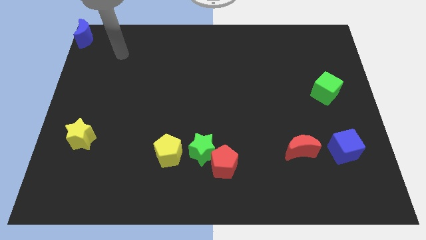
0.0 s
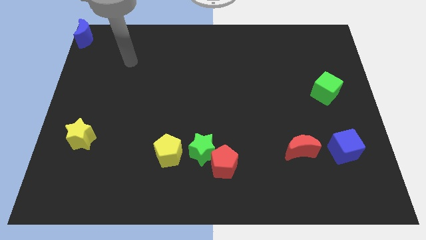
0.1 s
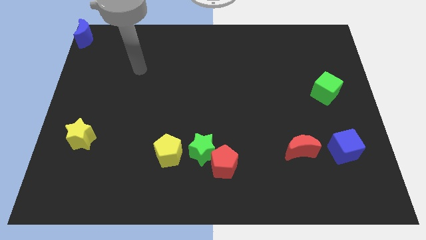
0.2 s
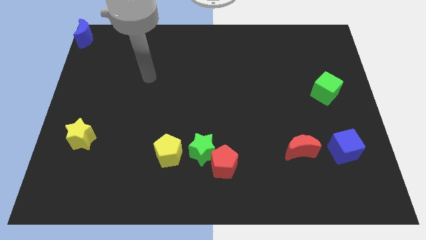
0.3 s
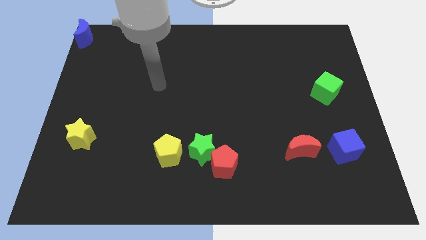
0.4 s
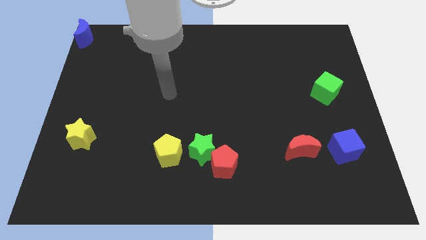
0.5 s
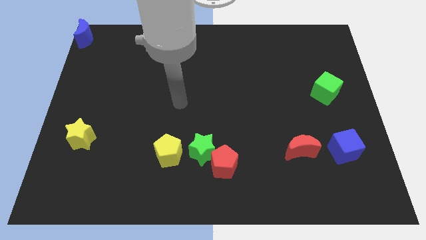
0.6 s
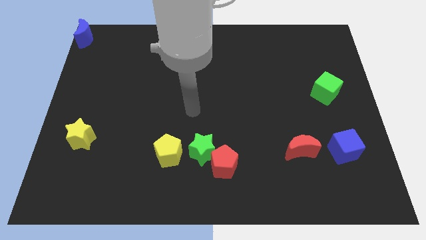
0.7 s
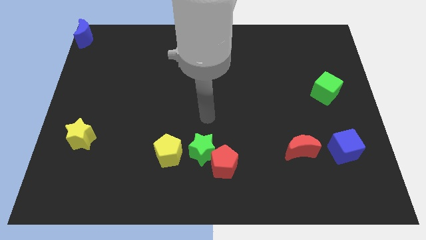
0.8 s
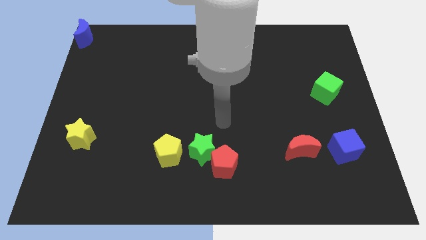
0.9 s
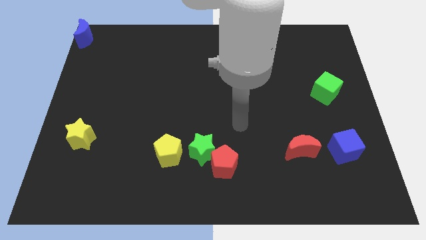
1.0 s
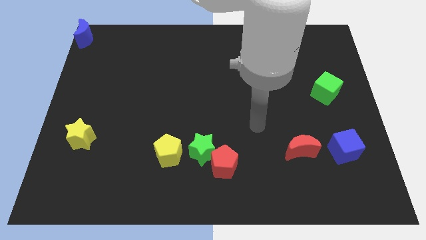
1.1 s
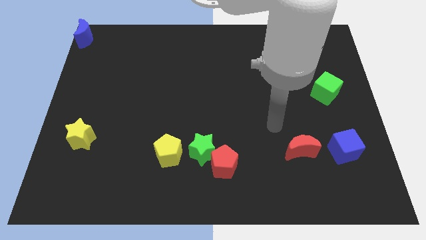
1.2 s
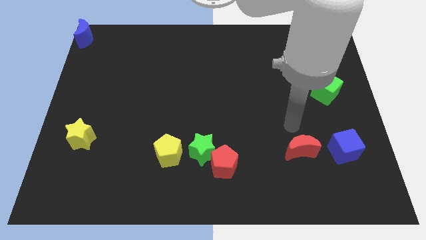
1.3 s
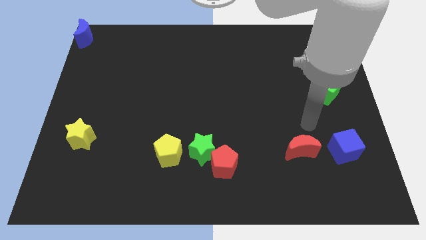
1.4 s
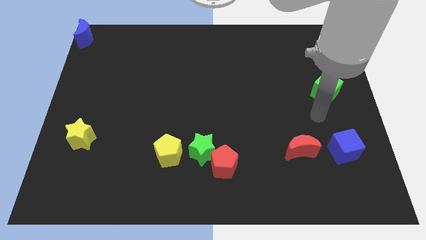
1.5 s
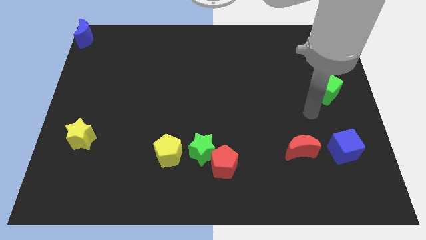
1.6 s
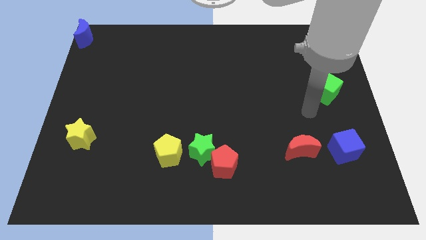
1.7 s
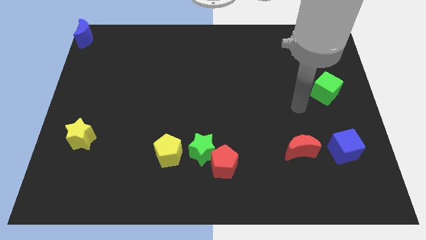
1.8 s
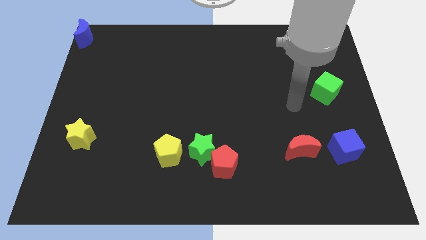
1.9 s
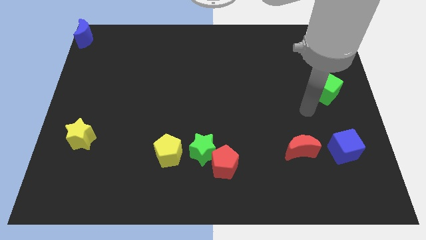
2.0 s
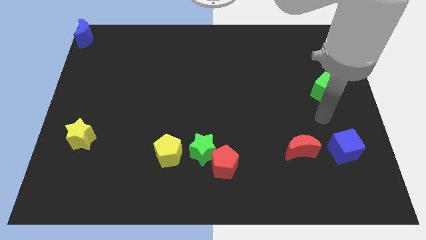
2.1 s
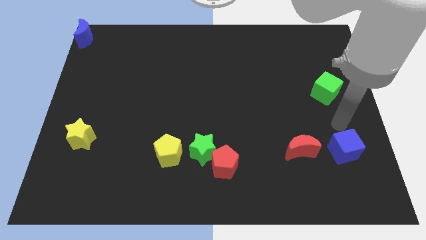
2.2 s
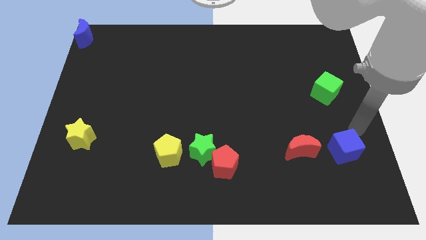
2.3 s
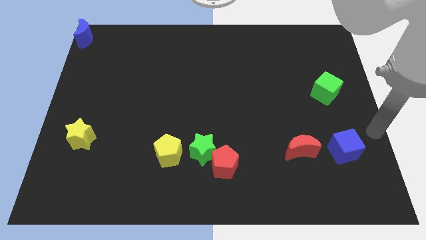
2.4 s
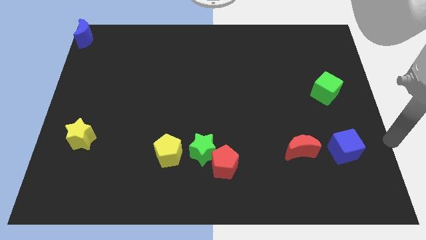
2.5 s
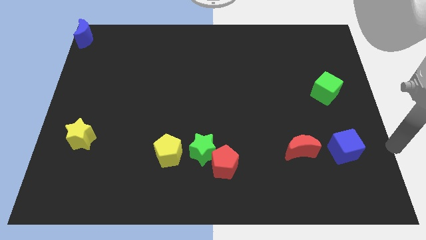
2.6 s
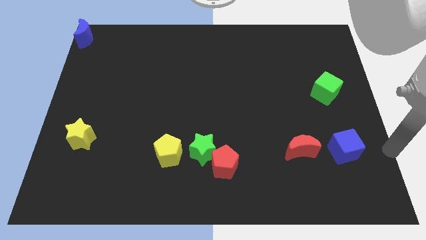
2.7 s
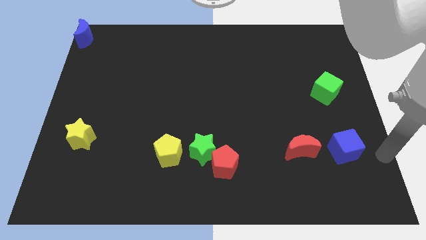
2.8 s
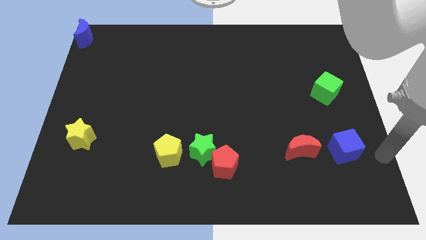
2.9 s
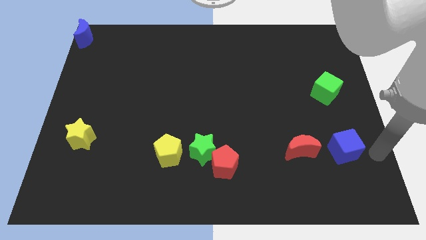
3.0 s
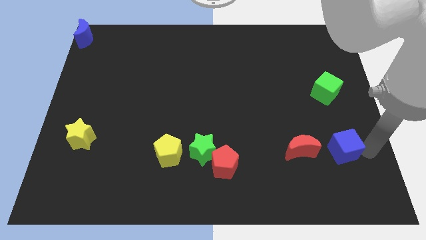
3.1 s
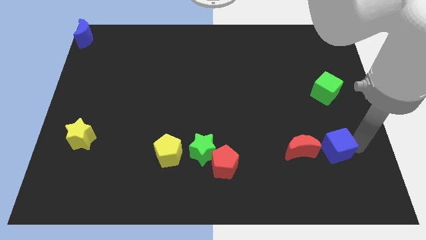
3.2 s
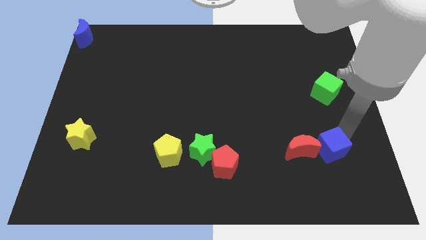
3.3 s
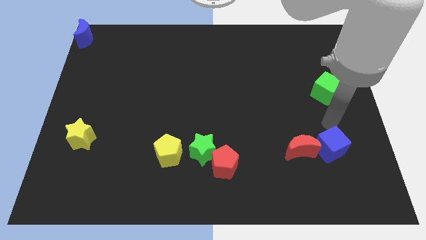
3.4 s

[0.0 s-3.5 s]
move the arm towards the blue cube

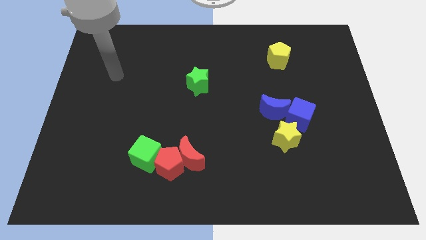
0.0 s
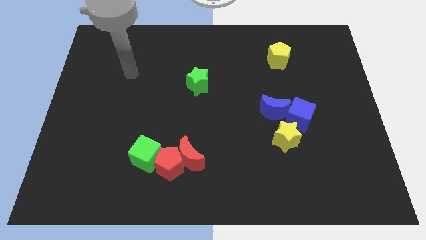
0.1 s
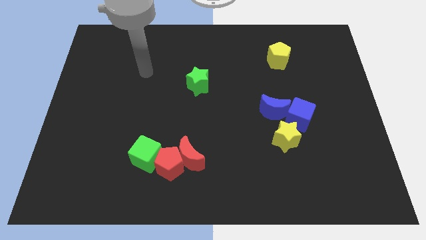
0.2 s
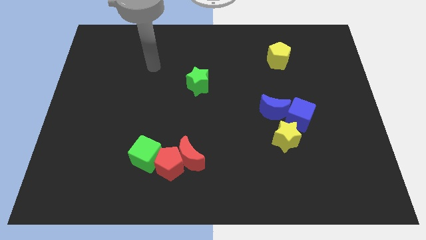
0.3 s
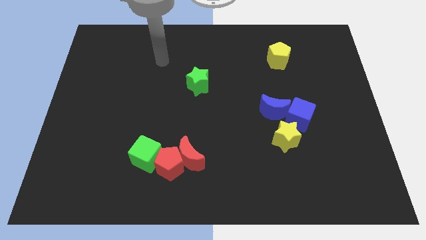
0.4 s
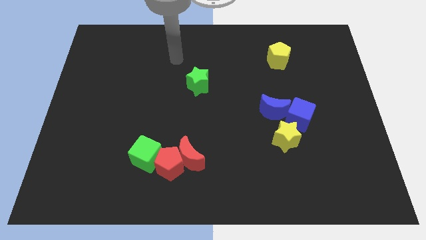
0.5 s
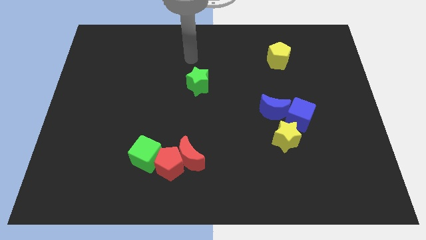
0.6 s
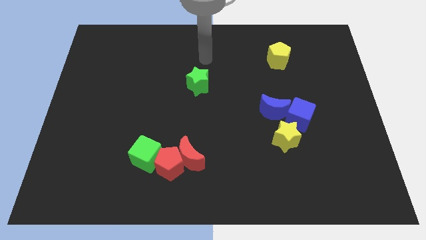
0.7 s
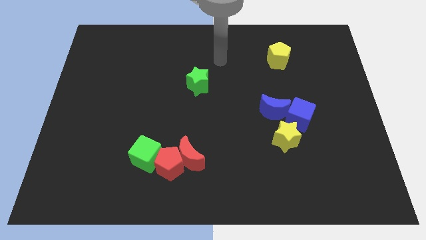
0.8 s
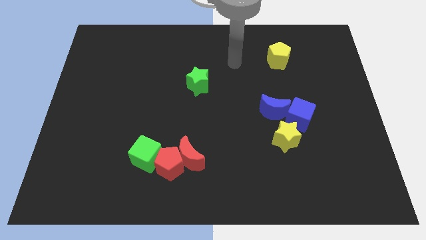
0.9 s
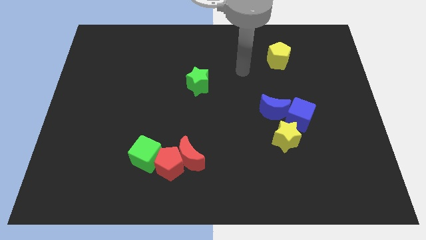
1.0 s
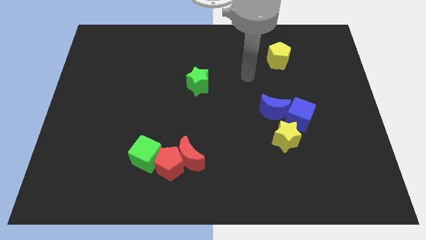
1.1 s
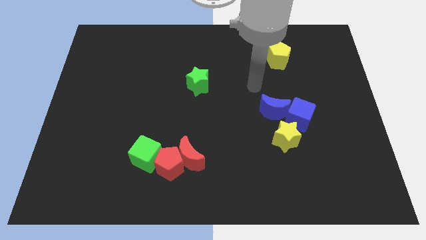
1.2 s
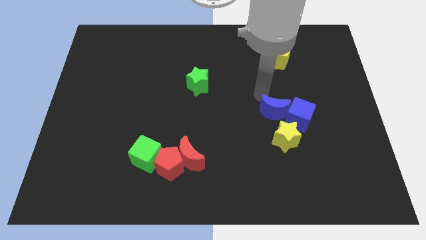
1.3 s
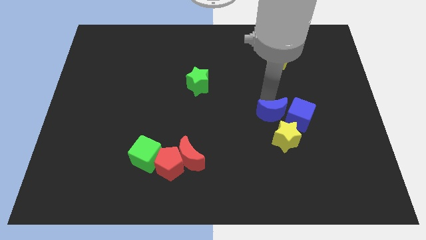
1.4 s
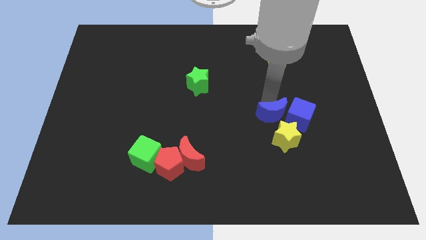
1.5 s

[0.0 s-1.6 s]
touch the blue moon

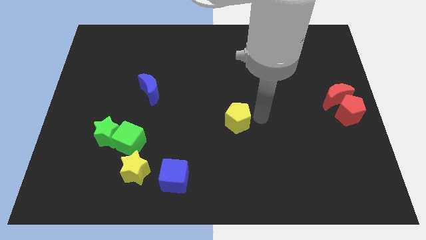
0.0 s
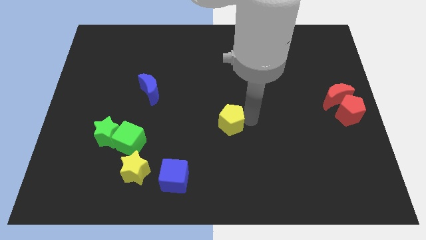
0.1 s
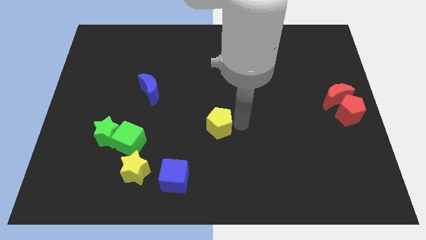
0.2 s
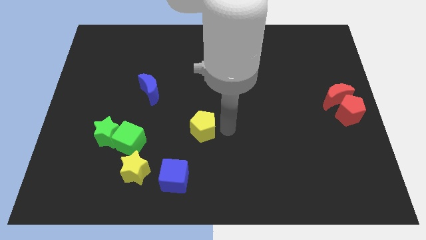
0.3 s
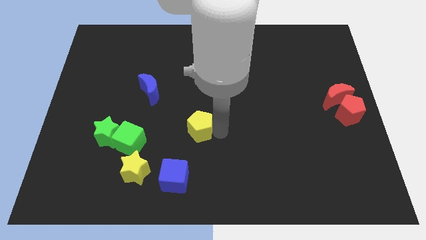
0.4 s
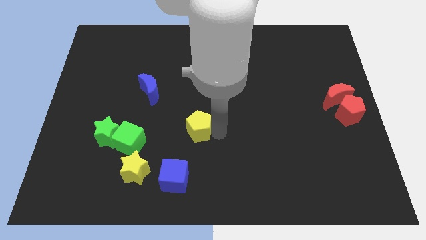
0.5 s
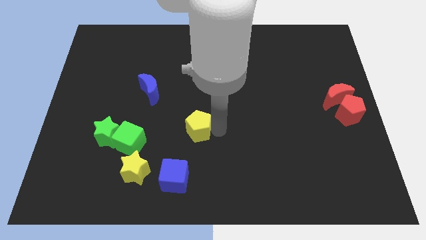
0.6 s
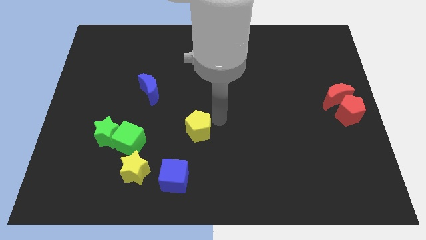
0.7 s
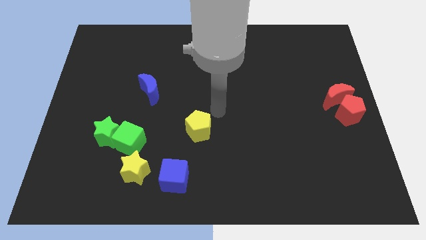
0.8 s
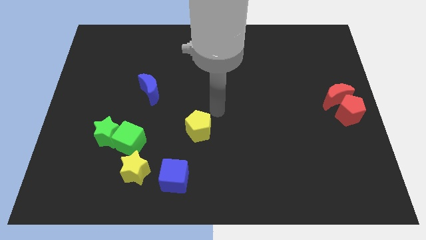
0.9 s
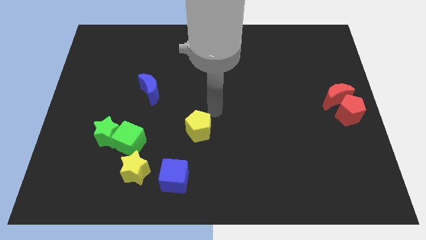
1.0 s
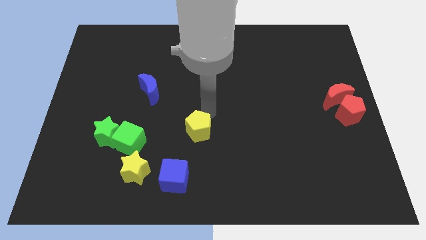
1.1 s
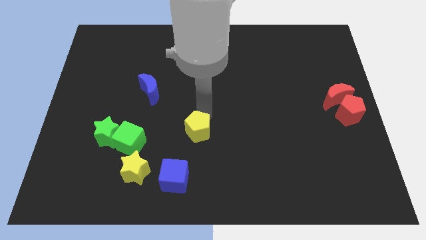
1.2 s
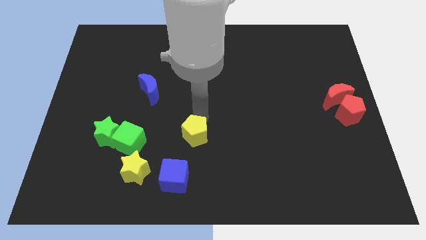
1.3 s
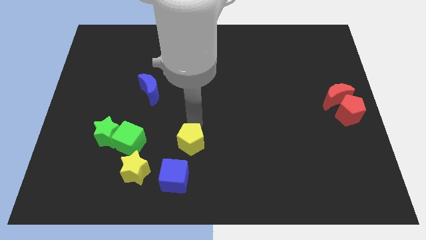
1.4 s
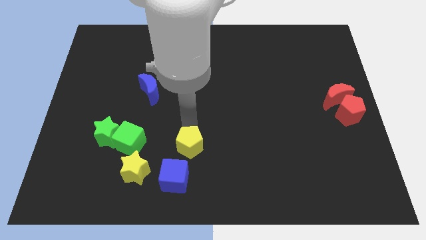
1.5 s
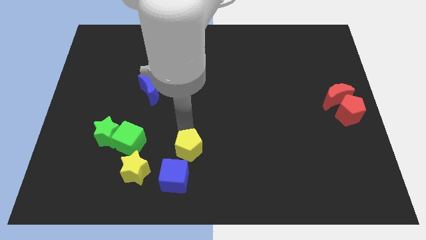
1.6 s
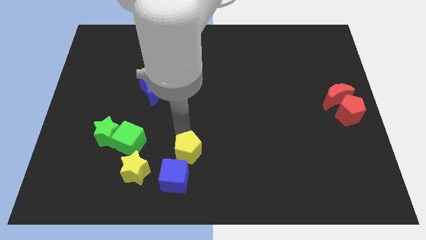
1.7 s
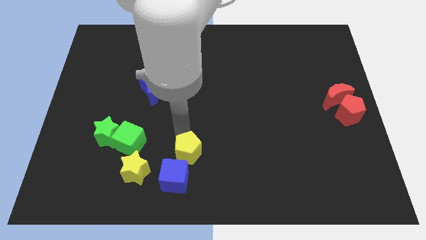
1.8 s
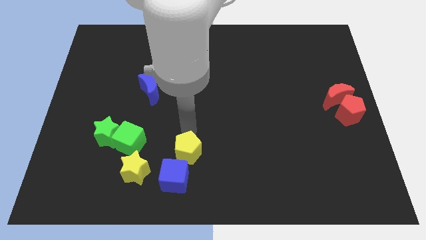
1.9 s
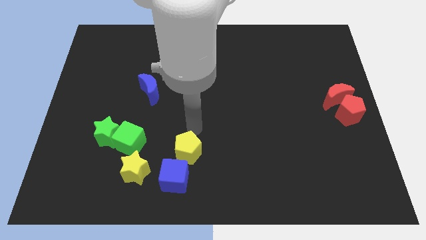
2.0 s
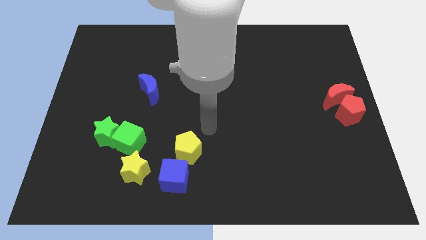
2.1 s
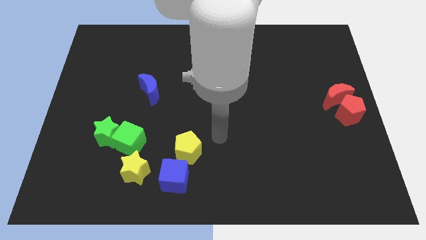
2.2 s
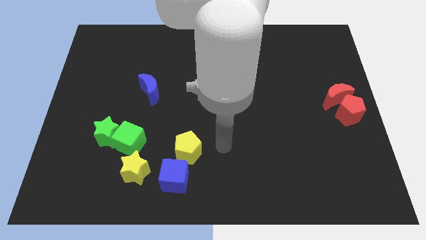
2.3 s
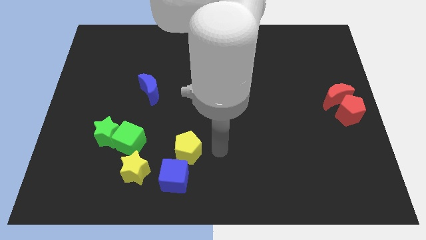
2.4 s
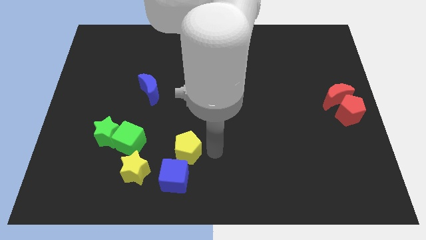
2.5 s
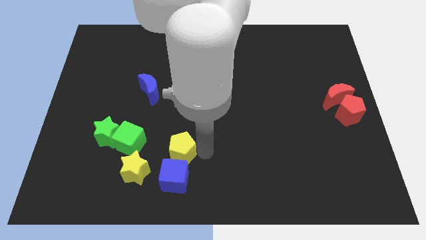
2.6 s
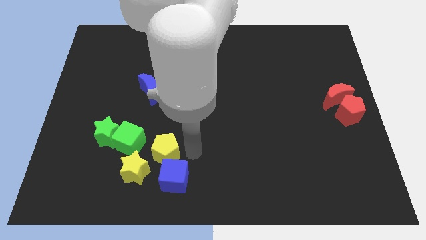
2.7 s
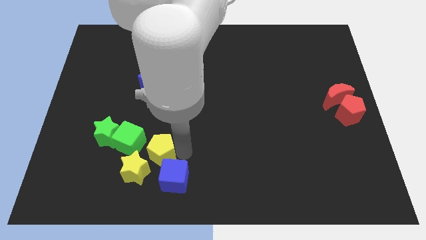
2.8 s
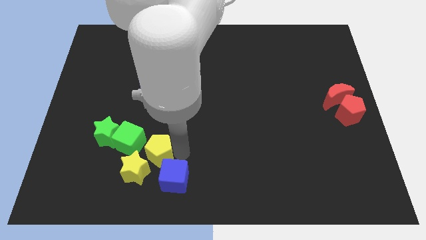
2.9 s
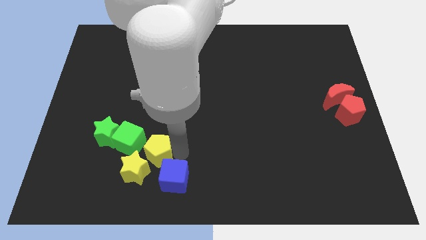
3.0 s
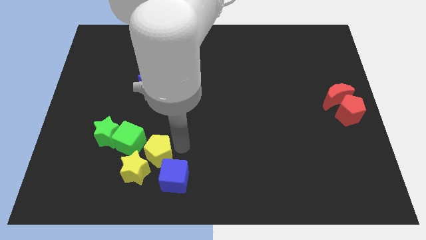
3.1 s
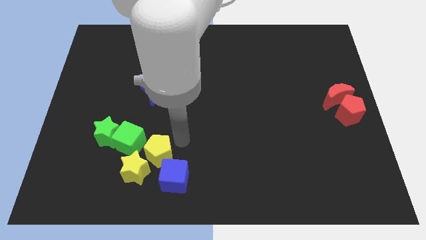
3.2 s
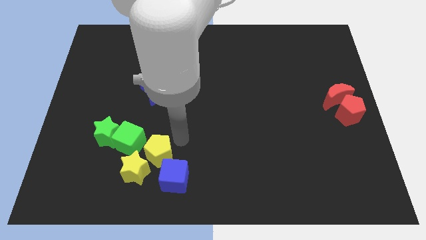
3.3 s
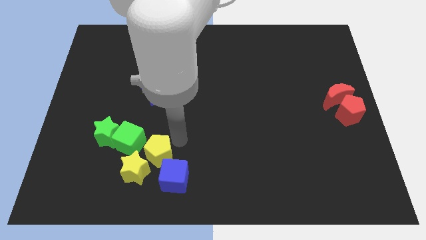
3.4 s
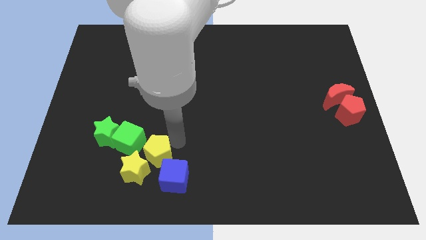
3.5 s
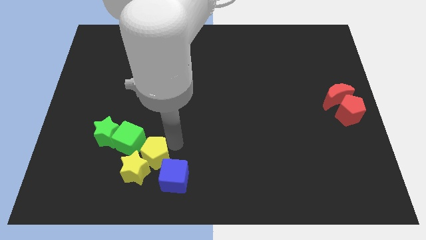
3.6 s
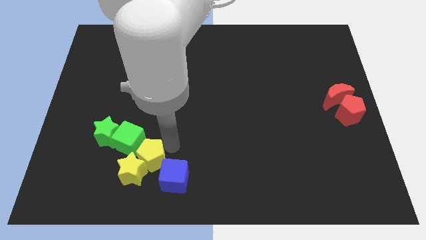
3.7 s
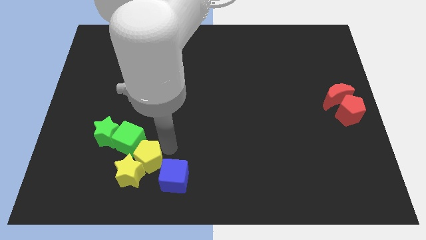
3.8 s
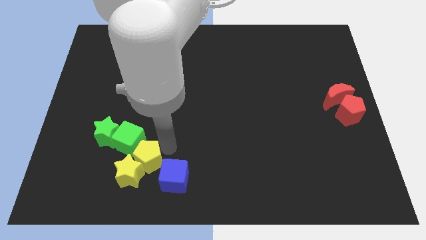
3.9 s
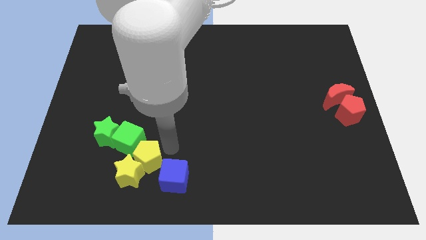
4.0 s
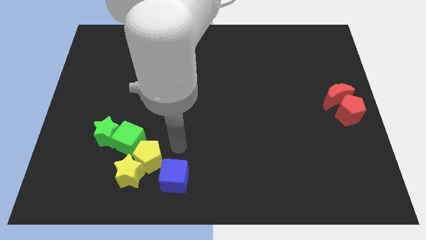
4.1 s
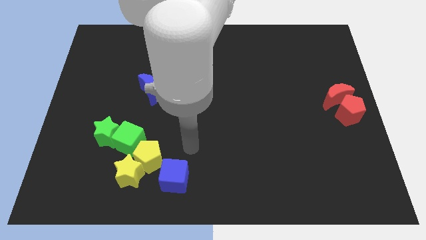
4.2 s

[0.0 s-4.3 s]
push the yellow pentagon into the yellow star
